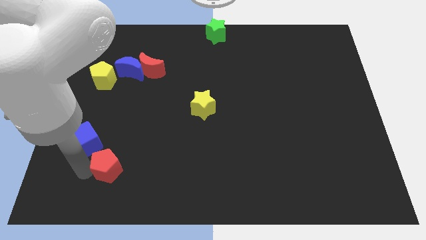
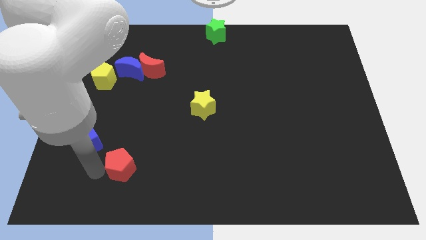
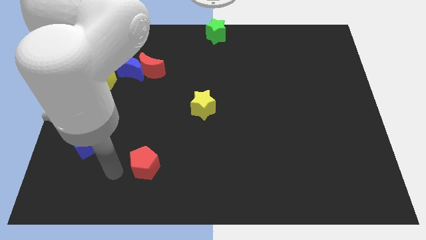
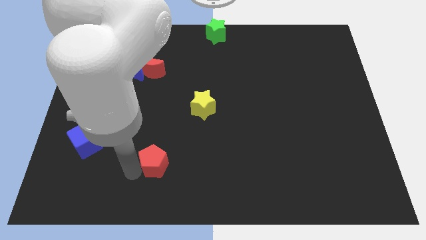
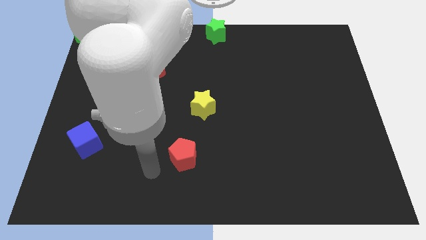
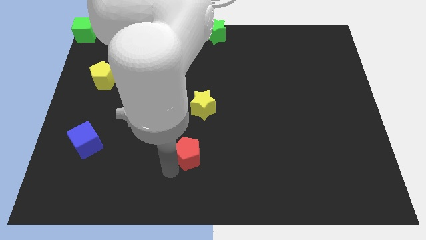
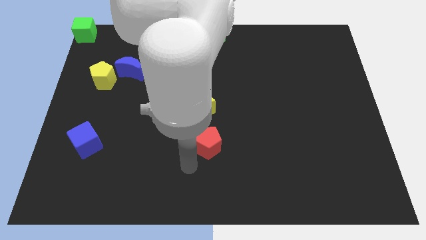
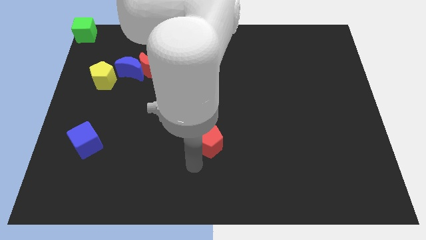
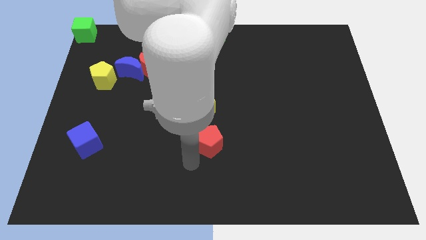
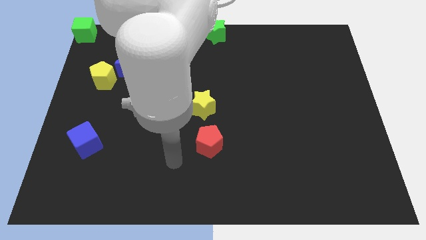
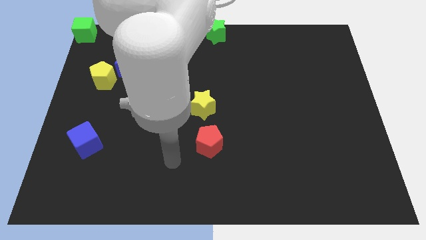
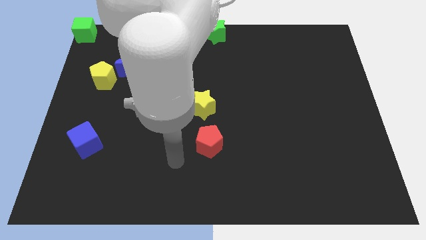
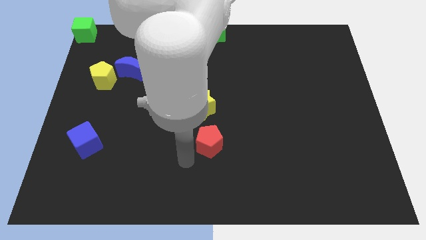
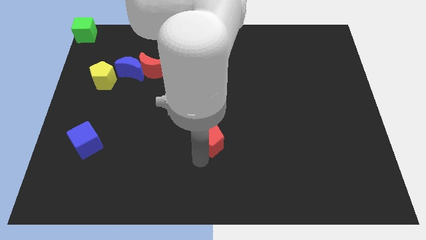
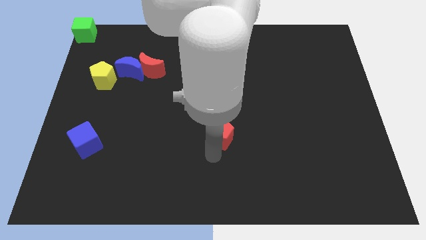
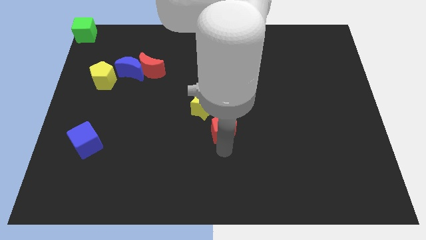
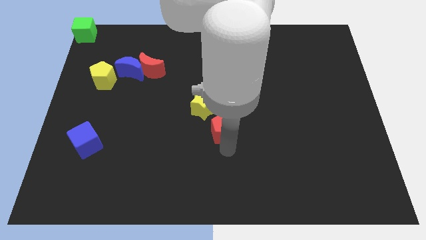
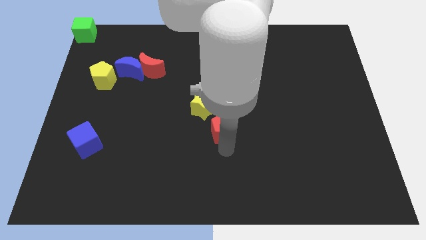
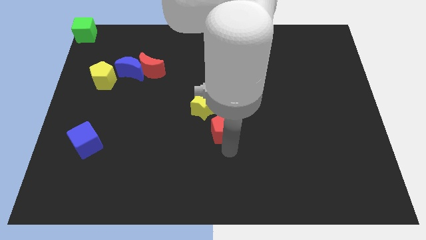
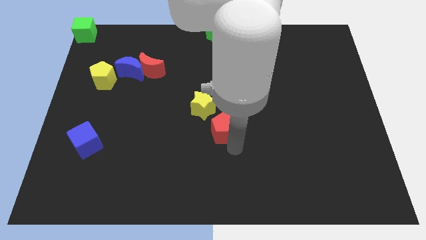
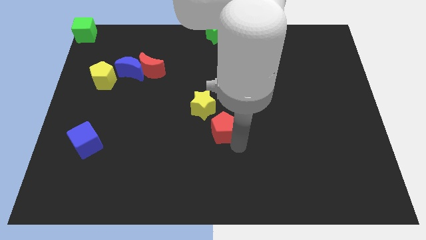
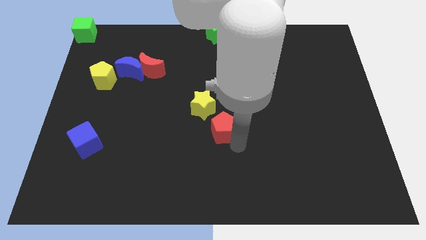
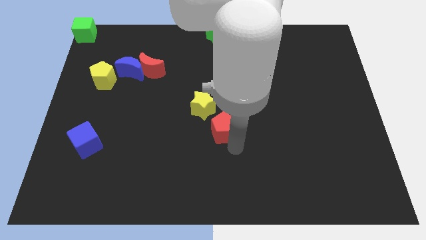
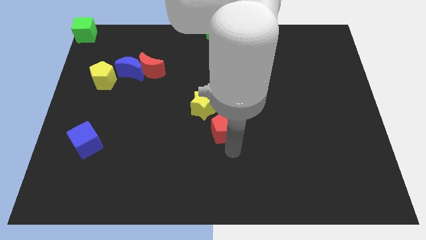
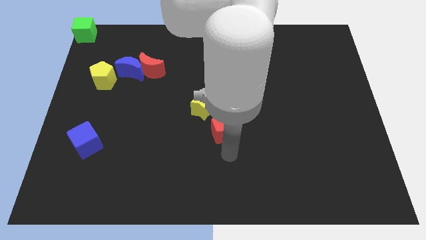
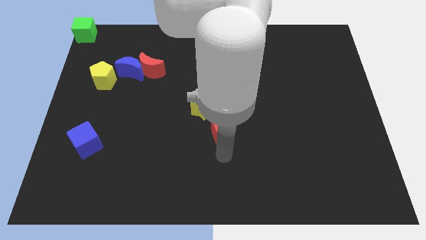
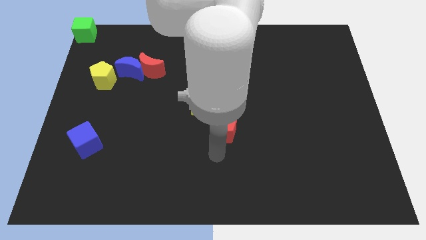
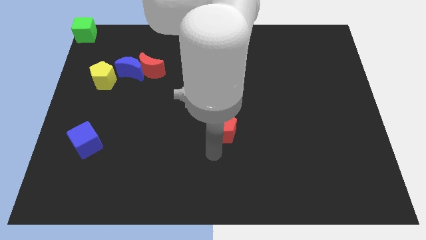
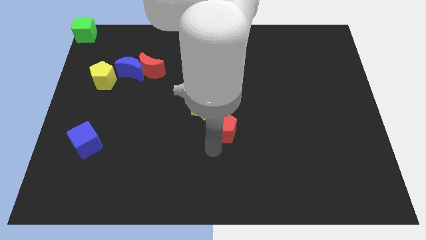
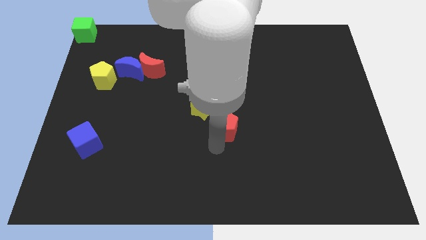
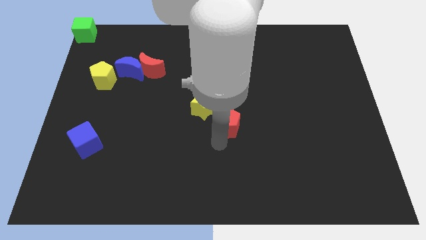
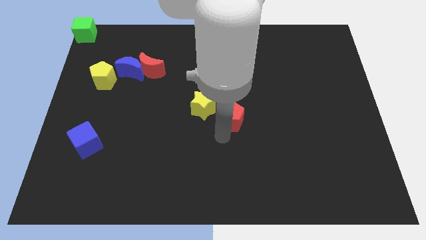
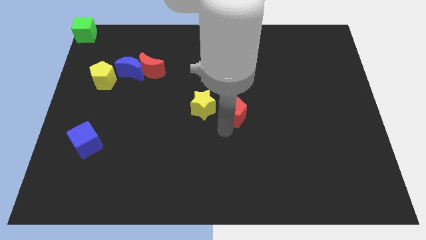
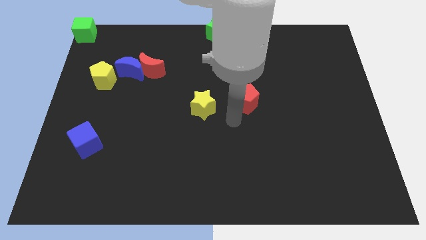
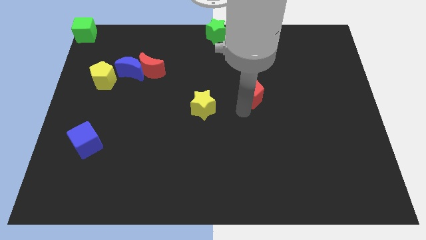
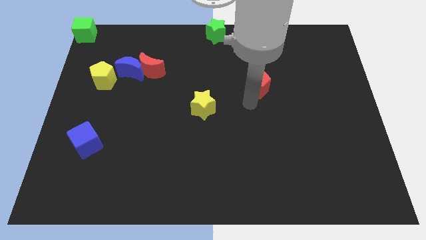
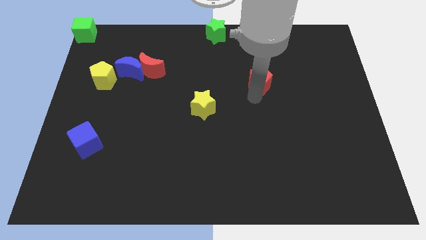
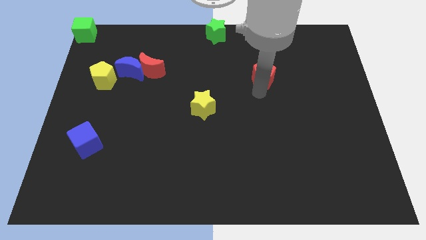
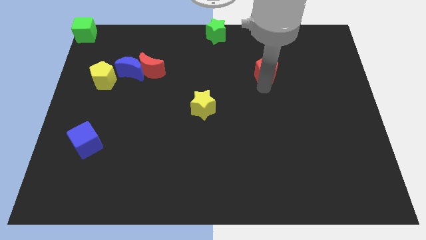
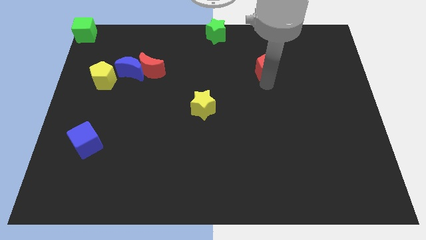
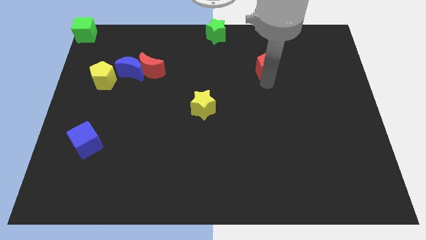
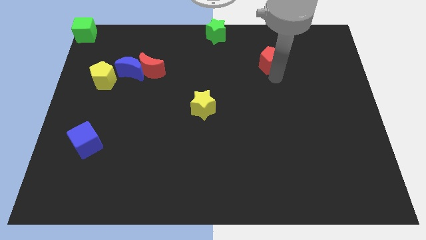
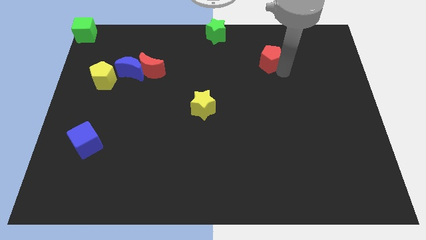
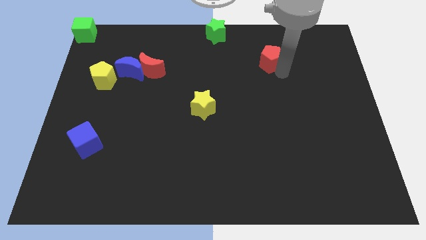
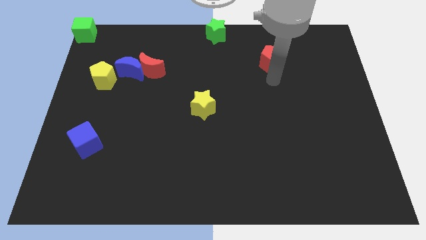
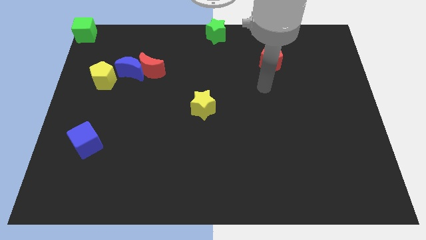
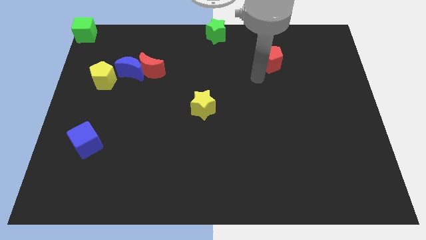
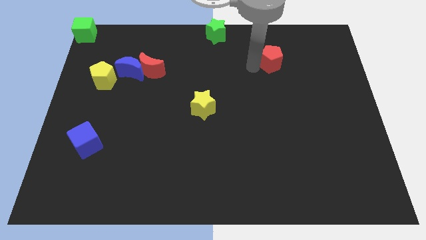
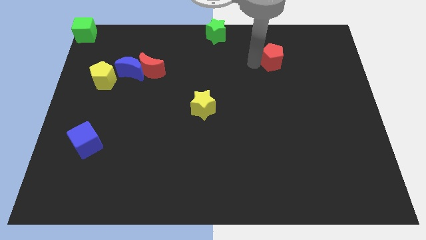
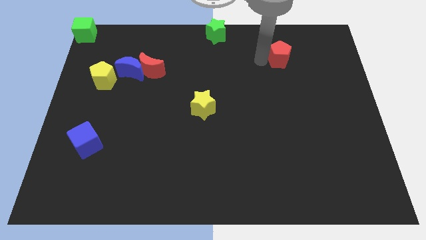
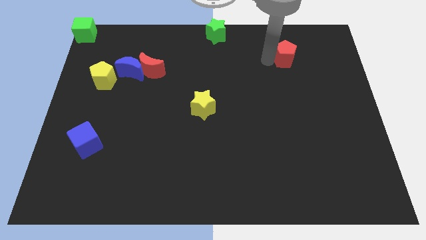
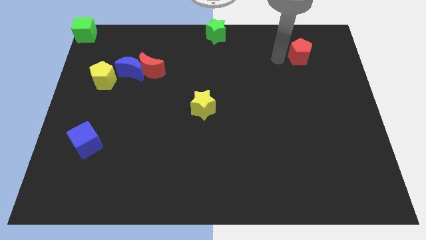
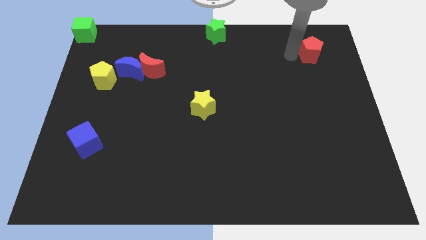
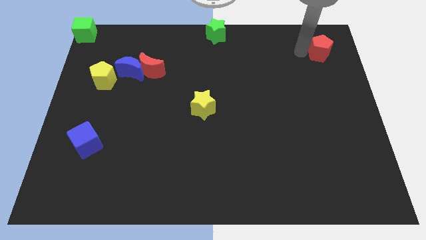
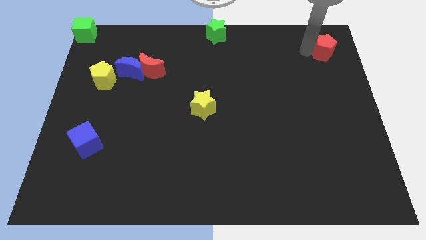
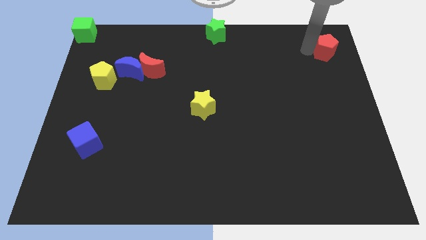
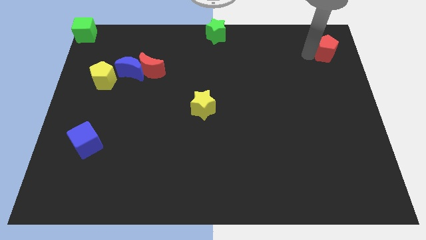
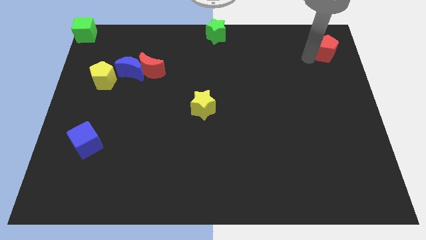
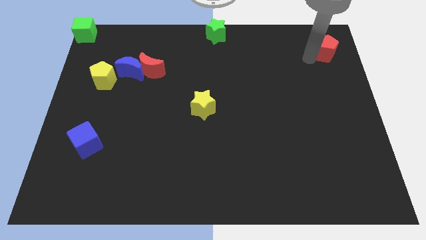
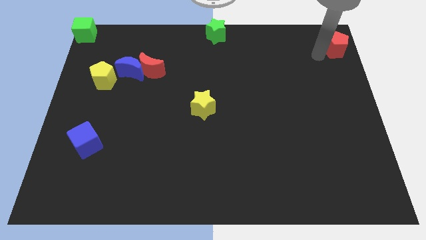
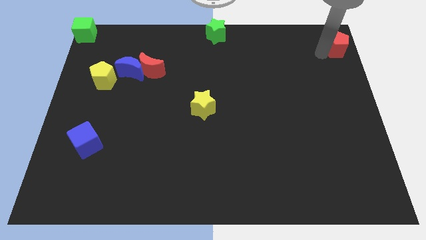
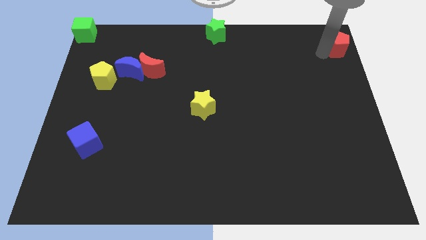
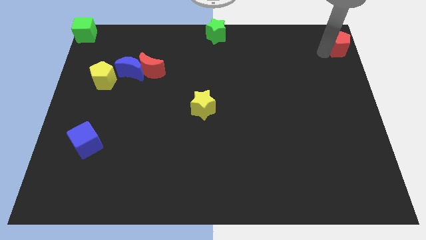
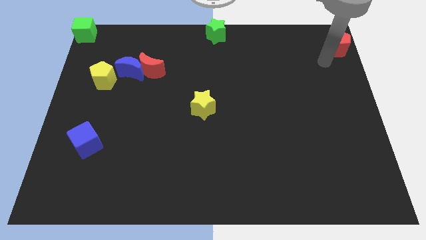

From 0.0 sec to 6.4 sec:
move red pentagon to the top right corner of the board

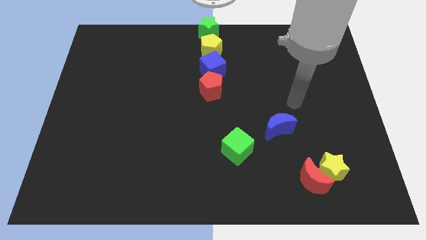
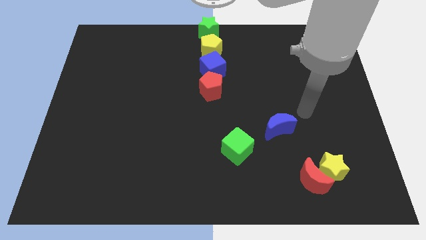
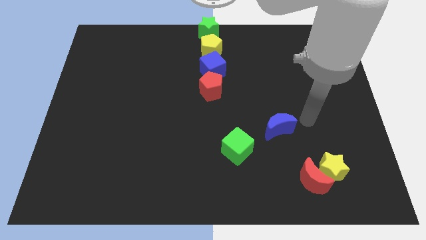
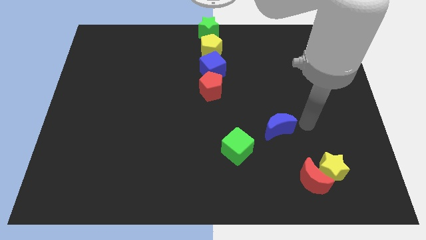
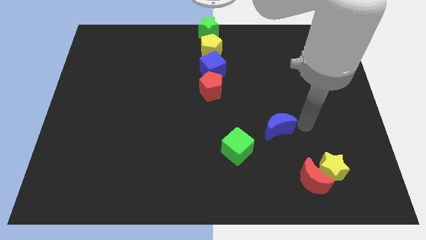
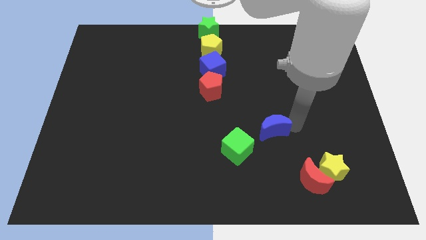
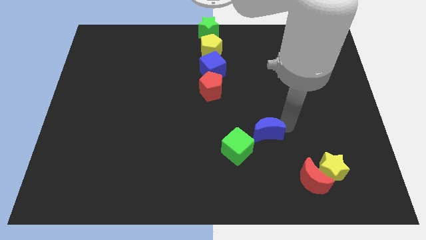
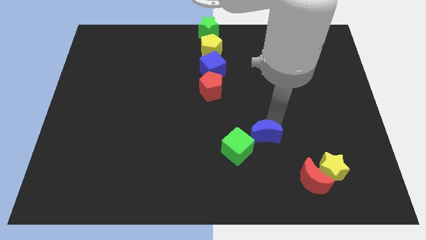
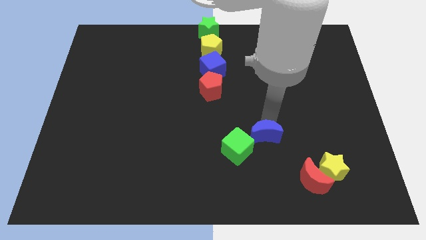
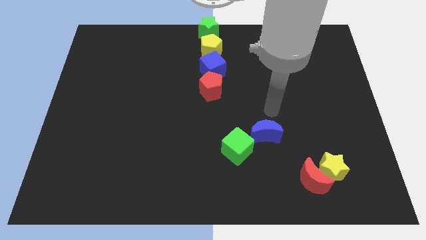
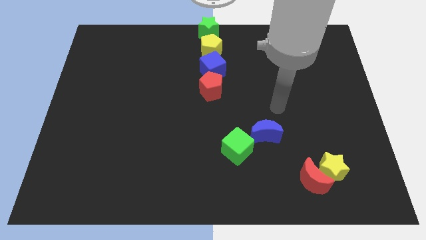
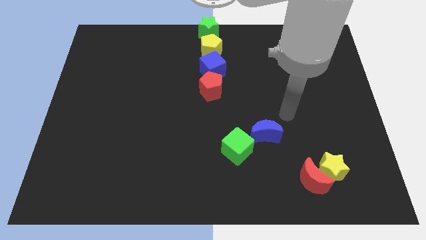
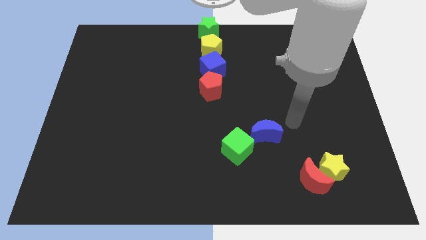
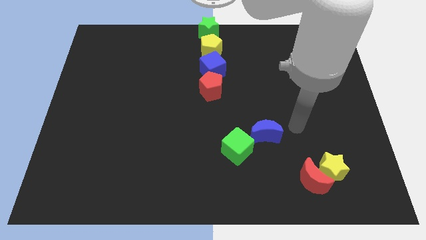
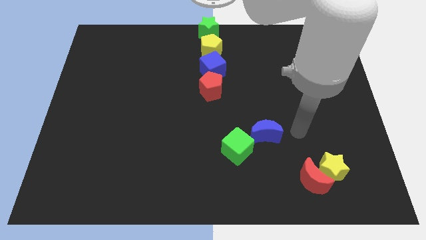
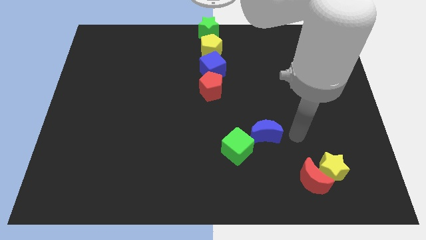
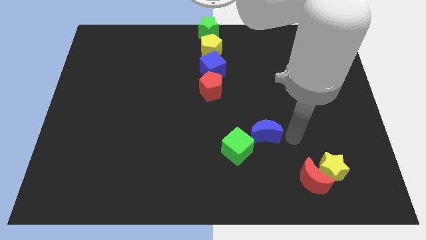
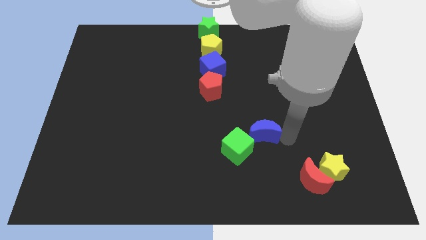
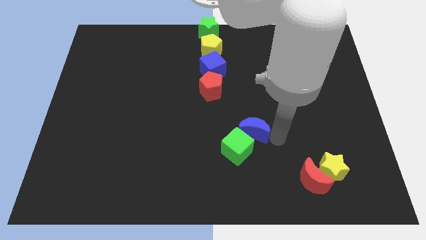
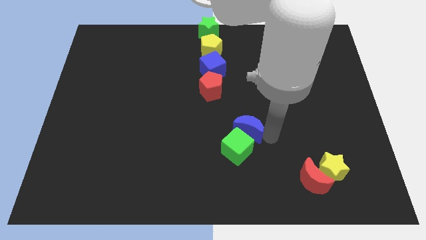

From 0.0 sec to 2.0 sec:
push the blue crescent into green cube

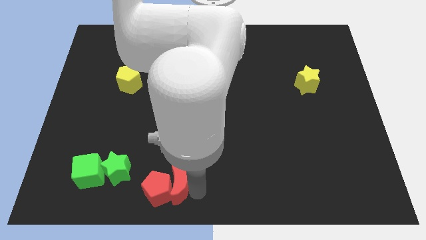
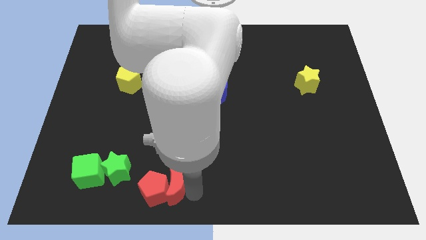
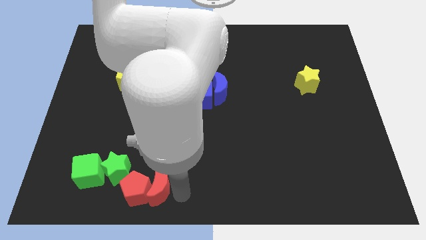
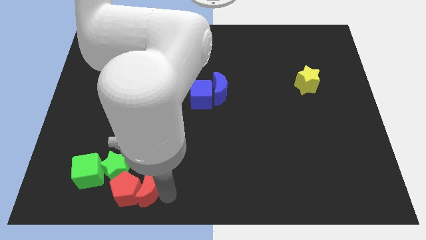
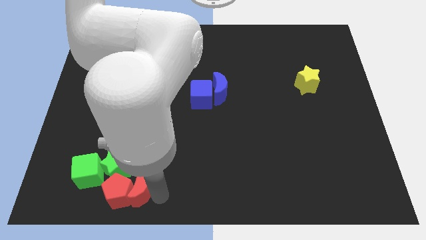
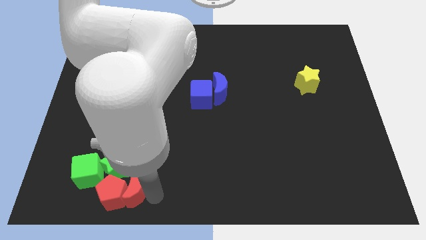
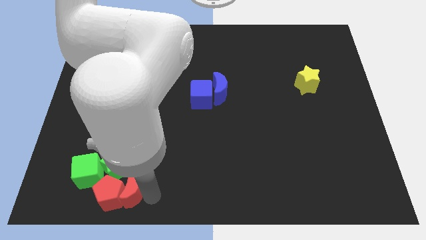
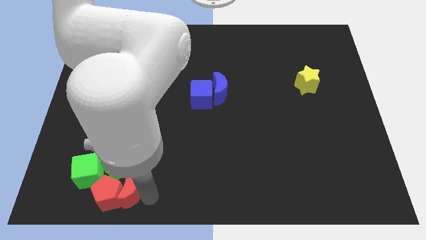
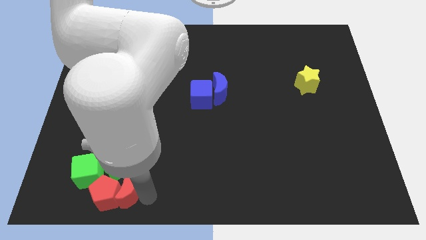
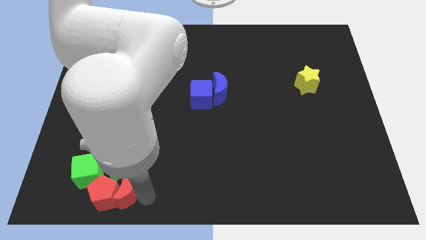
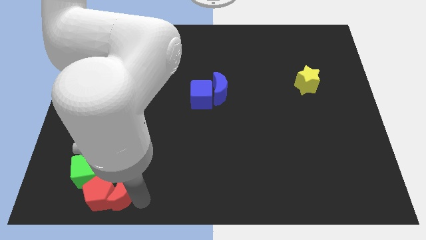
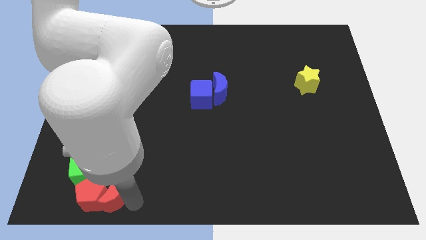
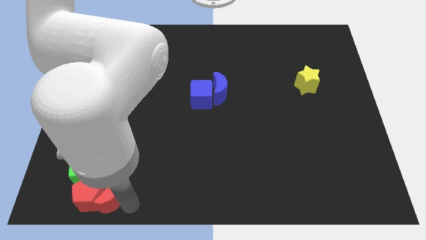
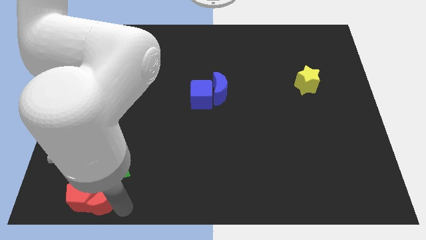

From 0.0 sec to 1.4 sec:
push the red pentagon and red moon to the bottom of the green cube
